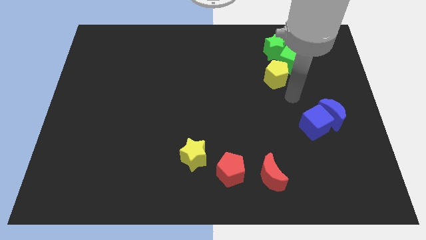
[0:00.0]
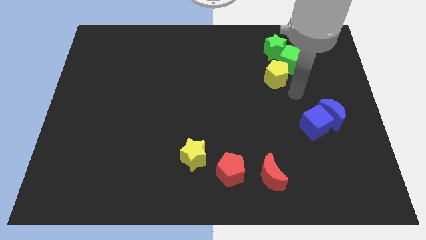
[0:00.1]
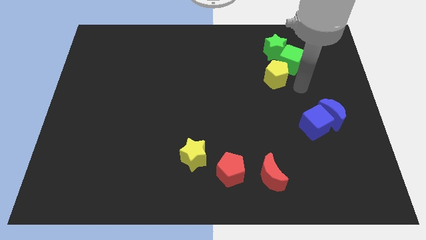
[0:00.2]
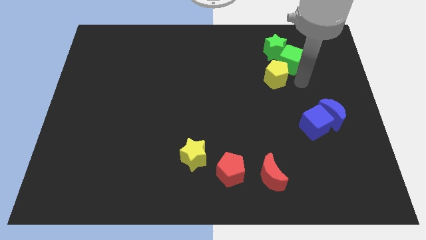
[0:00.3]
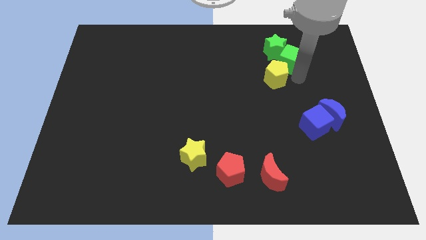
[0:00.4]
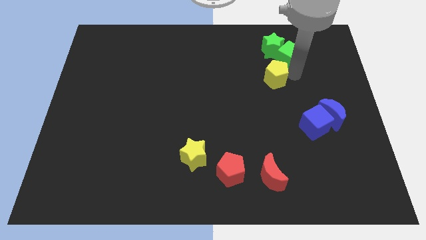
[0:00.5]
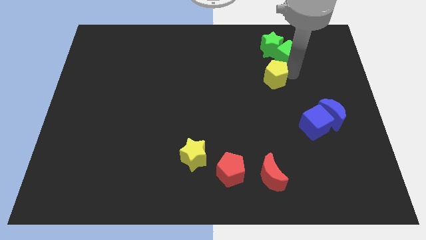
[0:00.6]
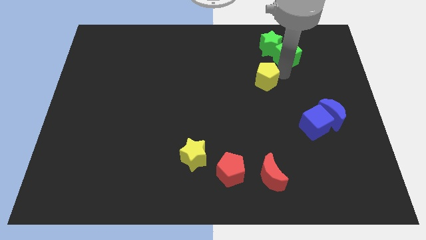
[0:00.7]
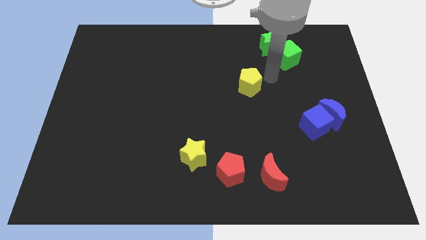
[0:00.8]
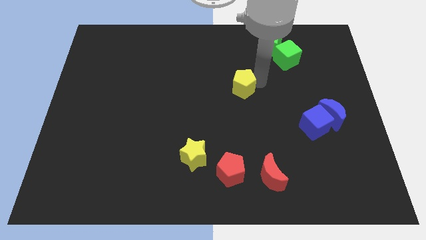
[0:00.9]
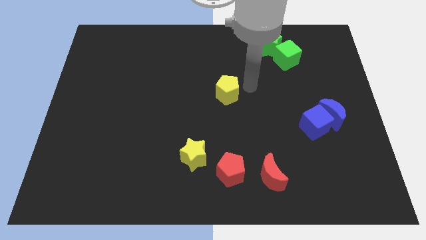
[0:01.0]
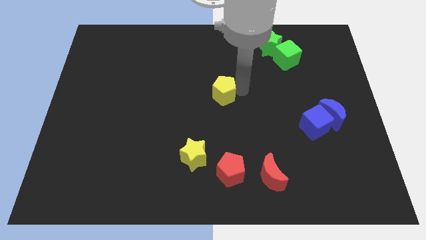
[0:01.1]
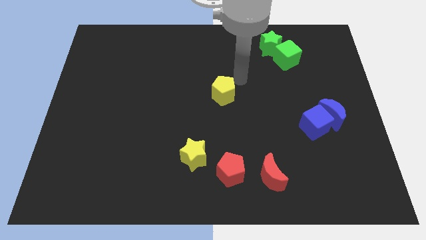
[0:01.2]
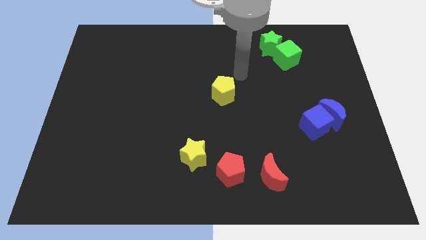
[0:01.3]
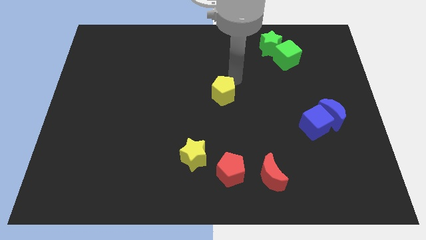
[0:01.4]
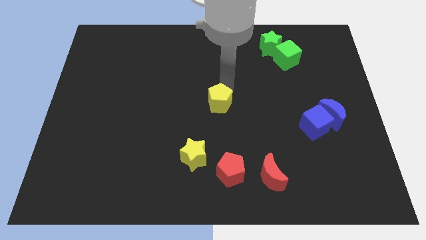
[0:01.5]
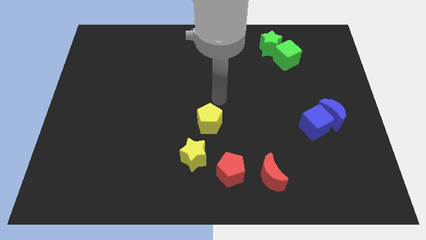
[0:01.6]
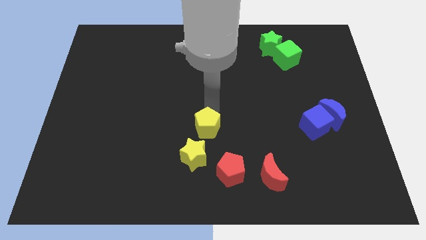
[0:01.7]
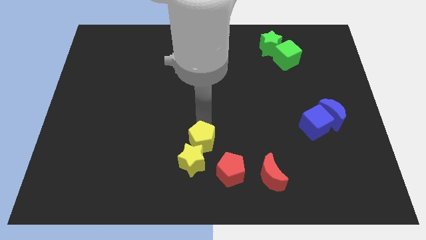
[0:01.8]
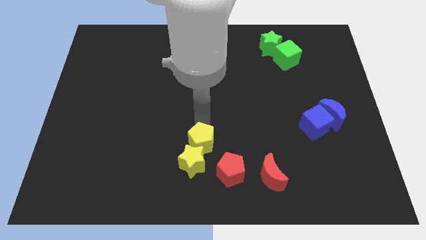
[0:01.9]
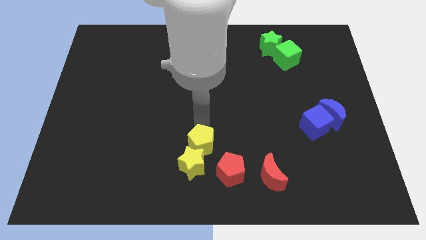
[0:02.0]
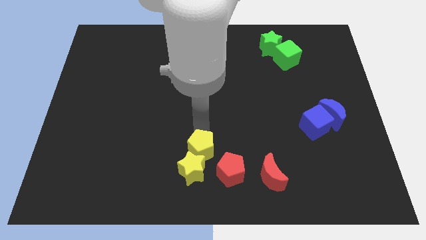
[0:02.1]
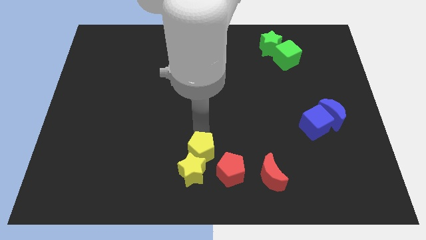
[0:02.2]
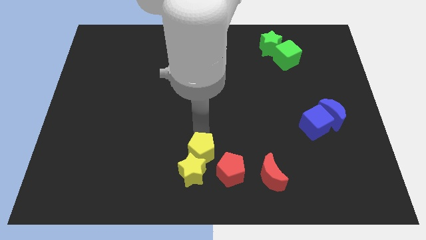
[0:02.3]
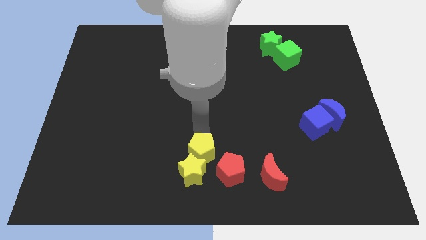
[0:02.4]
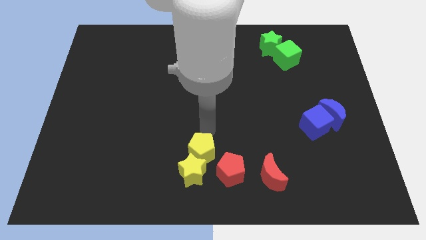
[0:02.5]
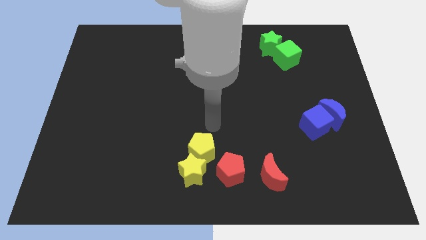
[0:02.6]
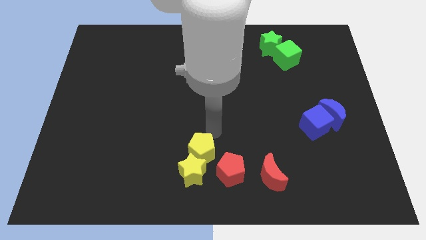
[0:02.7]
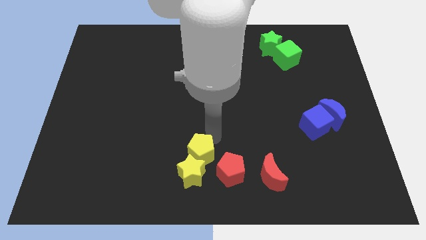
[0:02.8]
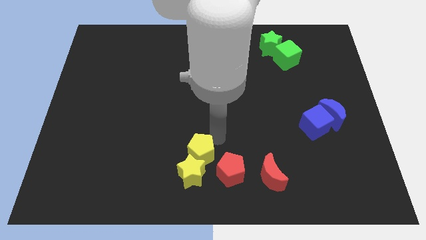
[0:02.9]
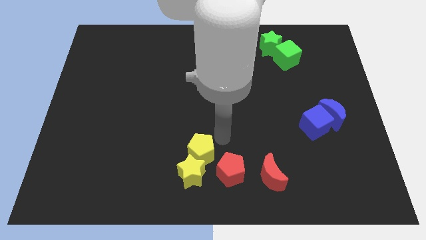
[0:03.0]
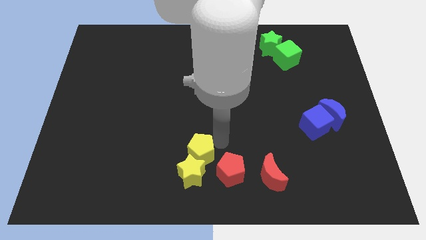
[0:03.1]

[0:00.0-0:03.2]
push the yellow pentagon into the yellow star

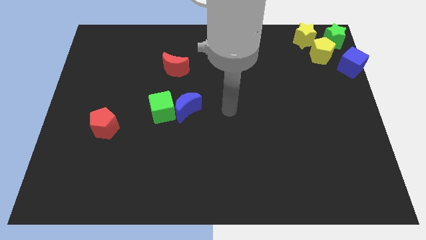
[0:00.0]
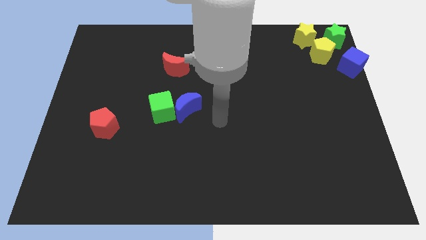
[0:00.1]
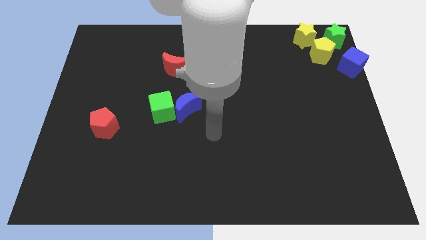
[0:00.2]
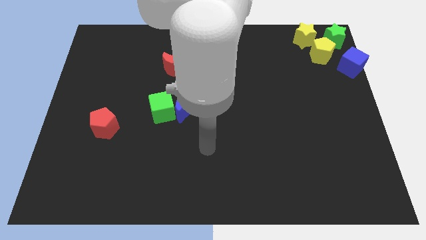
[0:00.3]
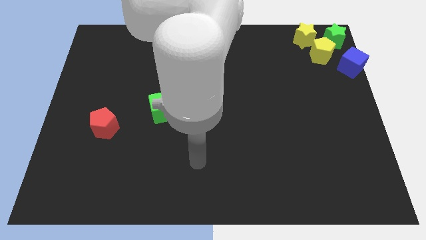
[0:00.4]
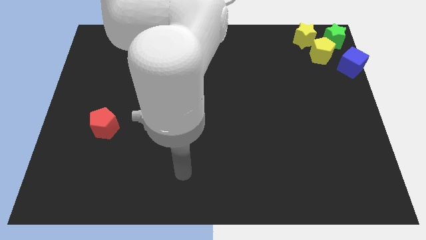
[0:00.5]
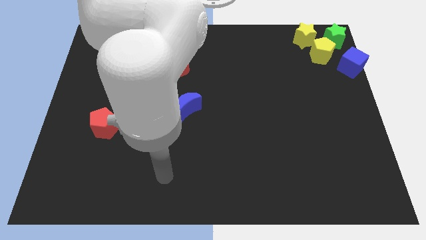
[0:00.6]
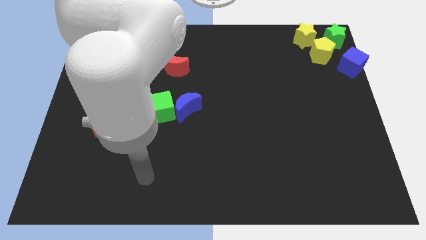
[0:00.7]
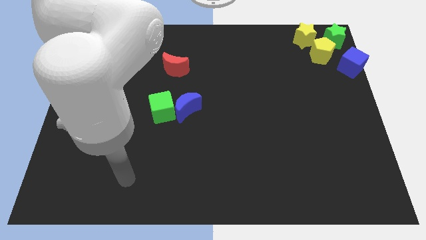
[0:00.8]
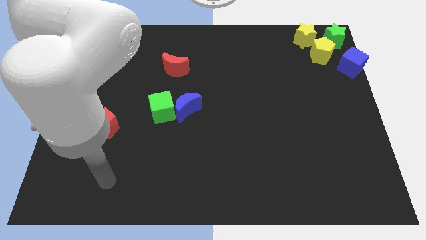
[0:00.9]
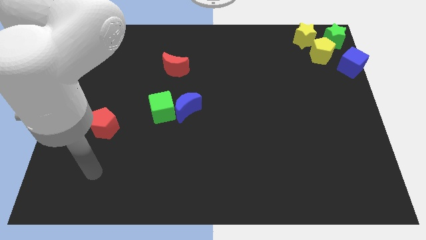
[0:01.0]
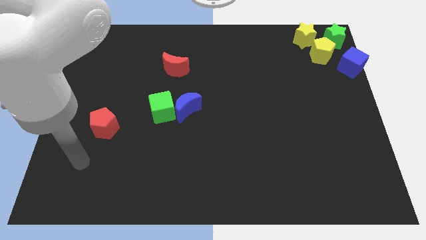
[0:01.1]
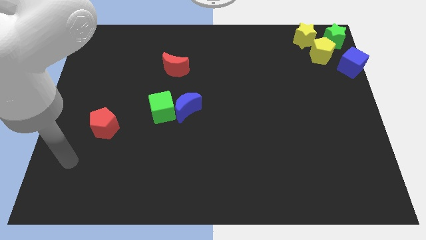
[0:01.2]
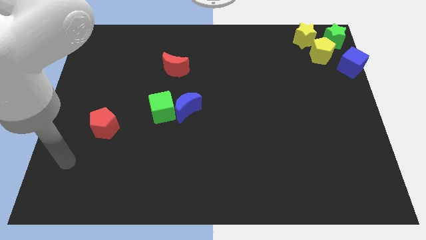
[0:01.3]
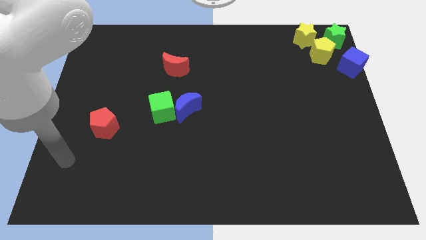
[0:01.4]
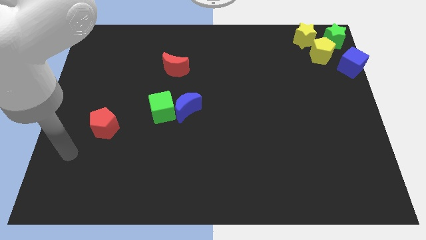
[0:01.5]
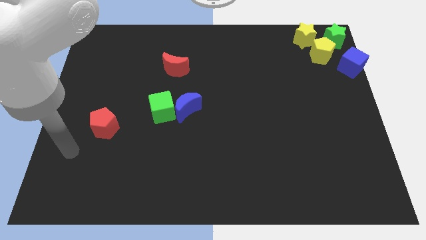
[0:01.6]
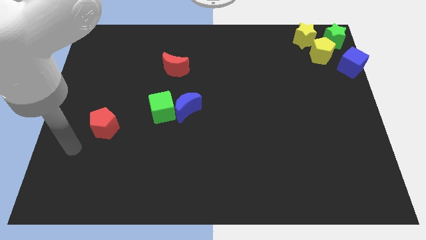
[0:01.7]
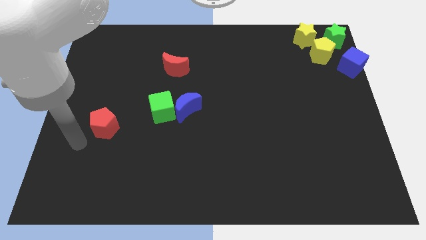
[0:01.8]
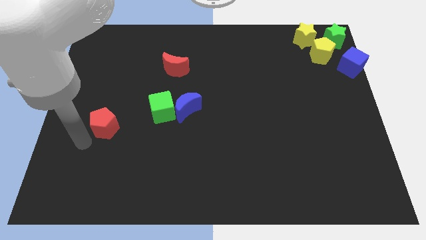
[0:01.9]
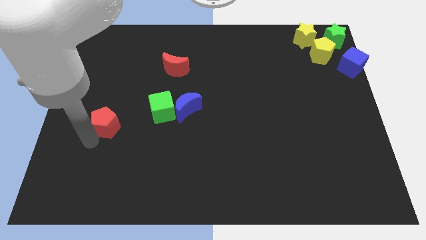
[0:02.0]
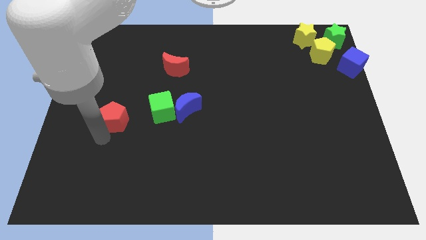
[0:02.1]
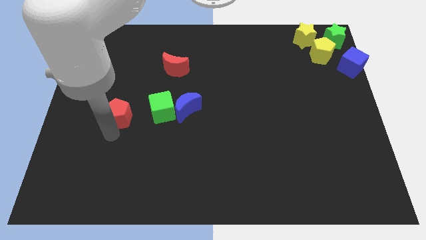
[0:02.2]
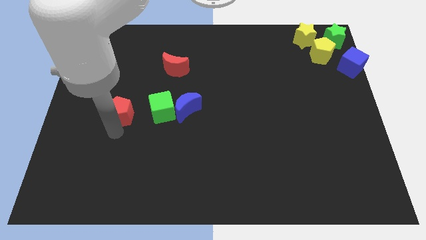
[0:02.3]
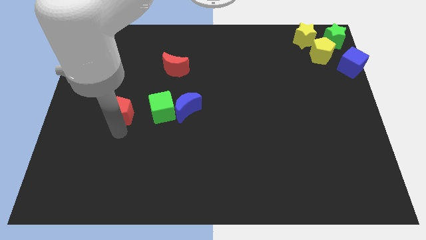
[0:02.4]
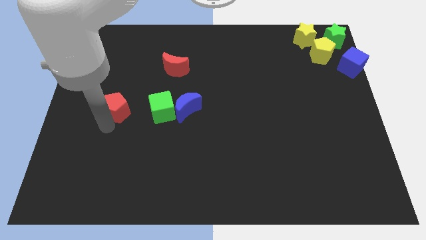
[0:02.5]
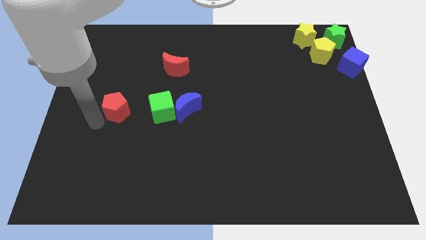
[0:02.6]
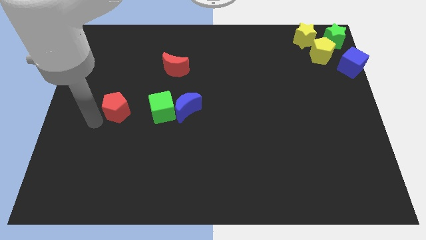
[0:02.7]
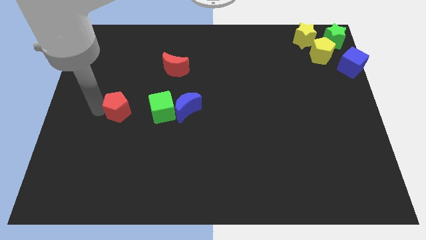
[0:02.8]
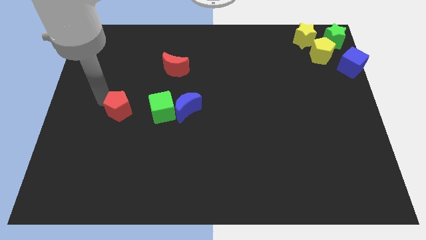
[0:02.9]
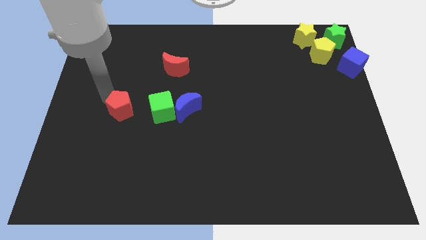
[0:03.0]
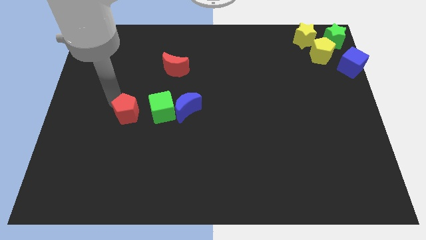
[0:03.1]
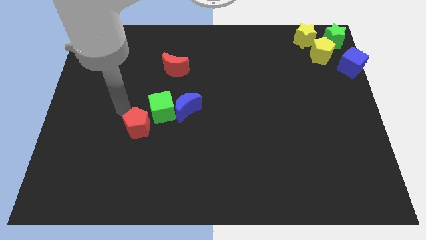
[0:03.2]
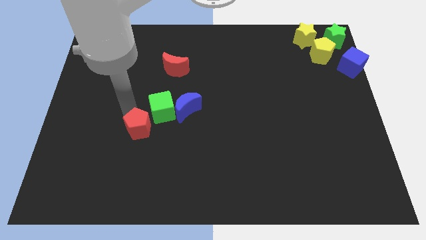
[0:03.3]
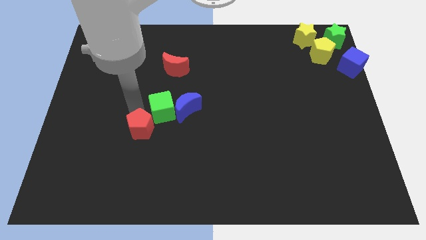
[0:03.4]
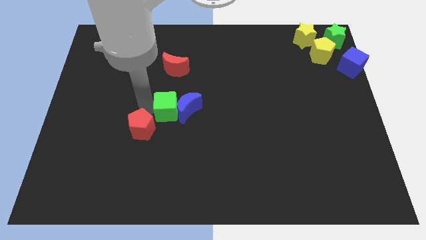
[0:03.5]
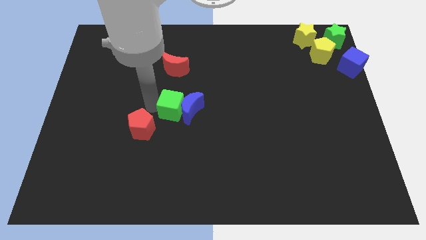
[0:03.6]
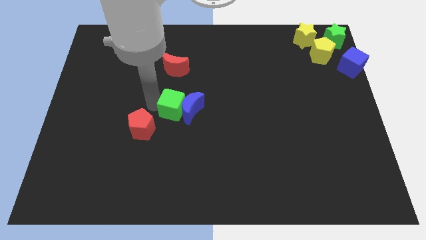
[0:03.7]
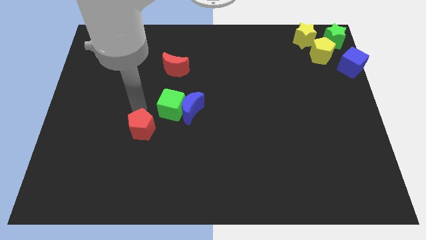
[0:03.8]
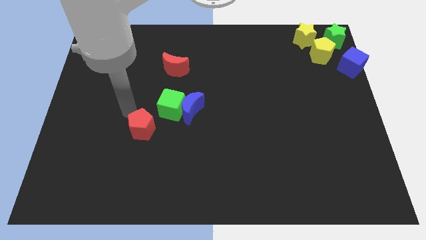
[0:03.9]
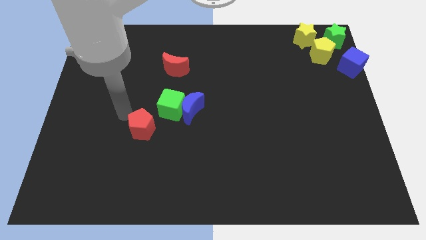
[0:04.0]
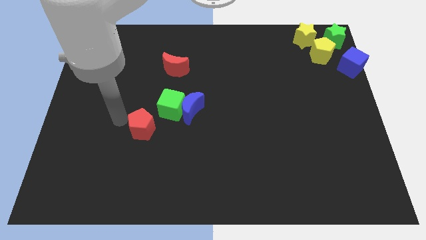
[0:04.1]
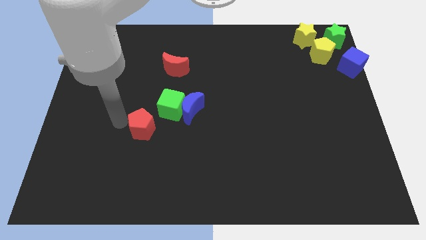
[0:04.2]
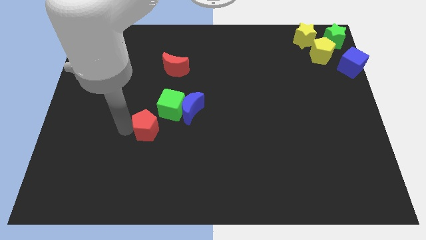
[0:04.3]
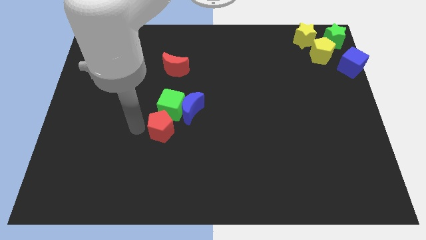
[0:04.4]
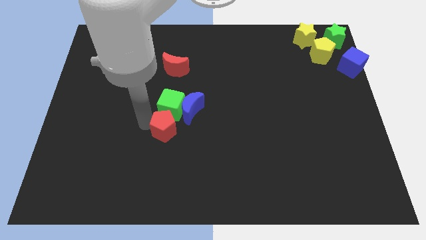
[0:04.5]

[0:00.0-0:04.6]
push the red pentagon below the green cube

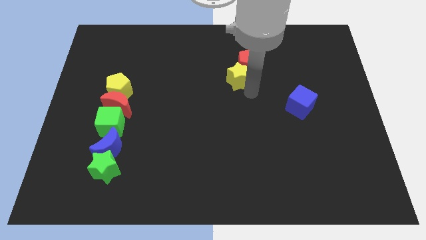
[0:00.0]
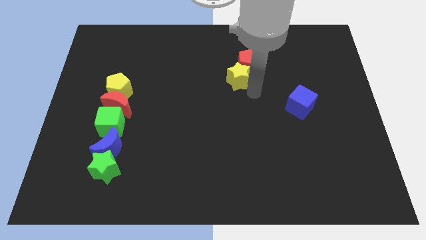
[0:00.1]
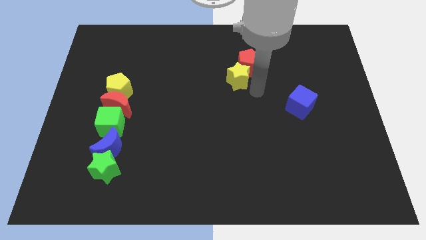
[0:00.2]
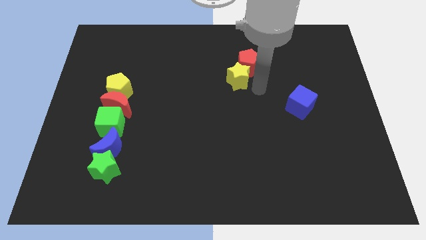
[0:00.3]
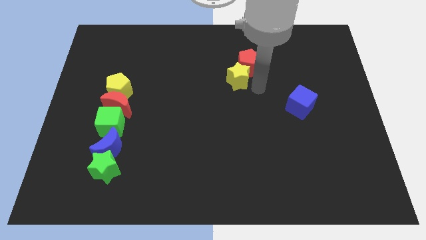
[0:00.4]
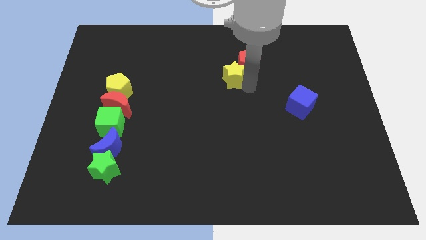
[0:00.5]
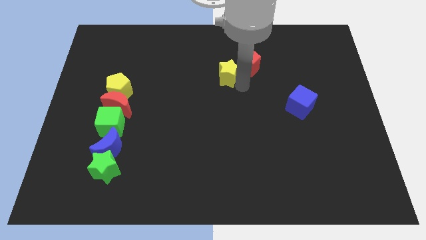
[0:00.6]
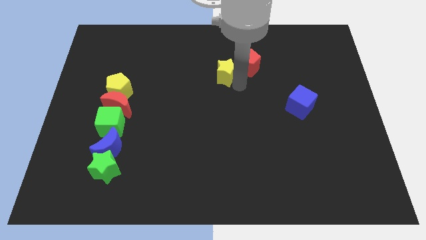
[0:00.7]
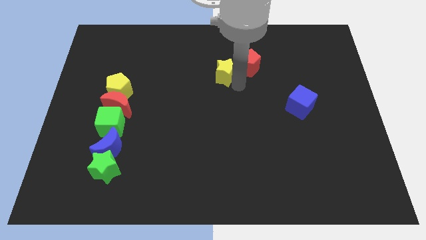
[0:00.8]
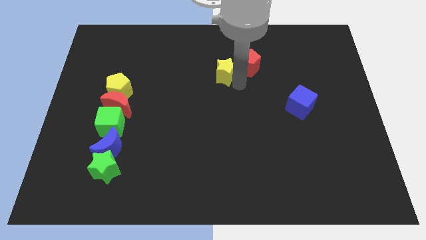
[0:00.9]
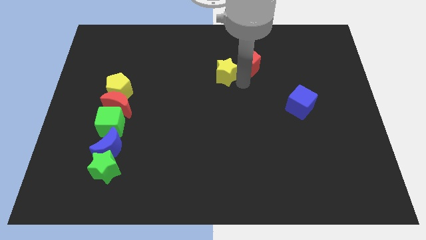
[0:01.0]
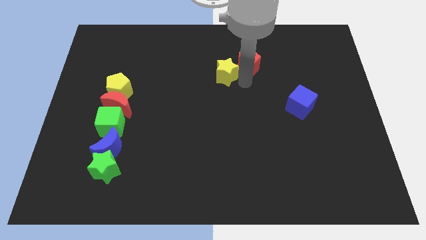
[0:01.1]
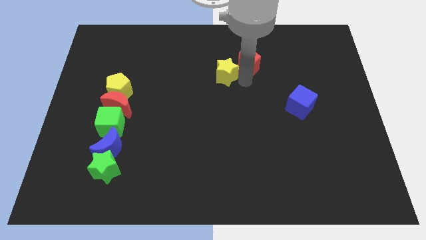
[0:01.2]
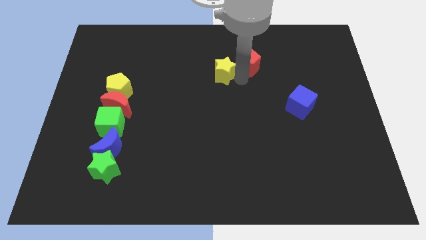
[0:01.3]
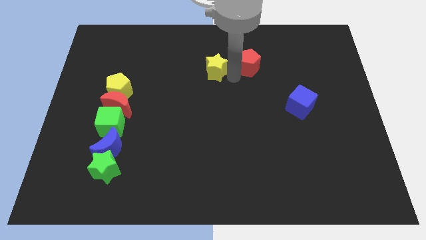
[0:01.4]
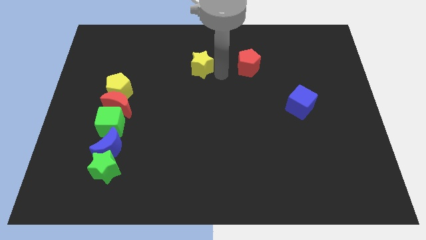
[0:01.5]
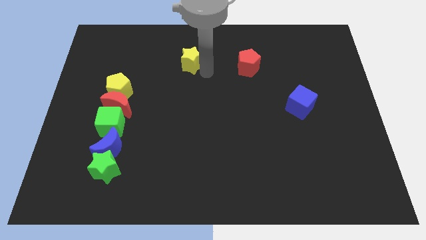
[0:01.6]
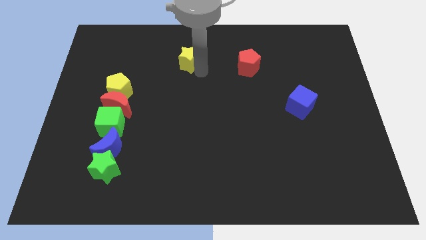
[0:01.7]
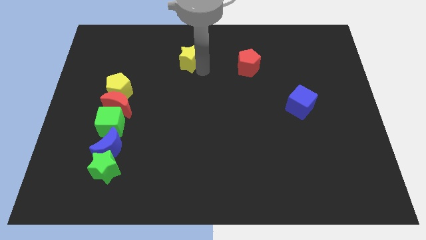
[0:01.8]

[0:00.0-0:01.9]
move the yellow star towards top left
